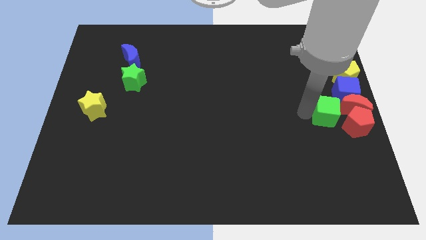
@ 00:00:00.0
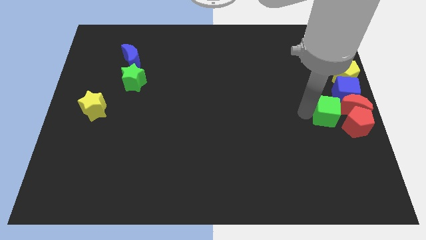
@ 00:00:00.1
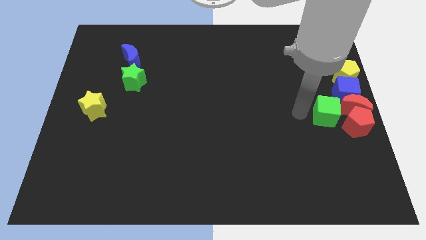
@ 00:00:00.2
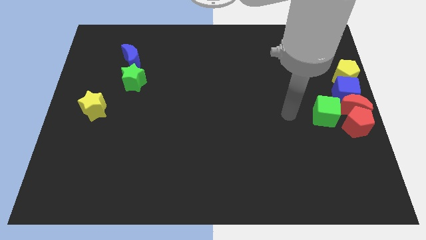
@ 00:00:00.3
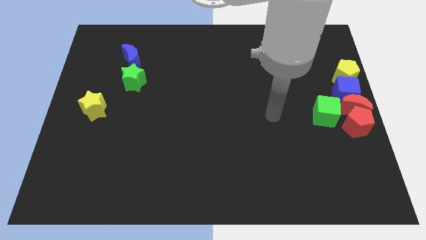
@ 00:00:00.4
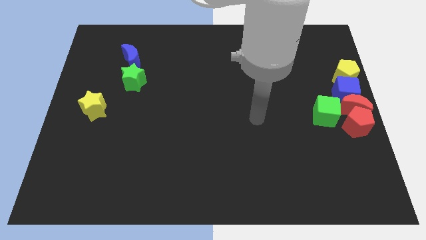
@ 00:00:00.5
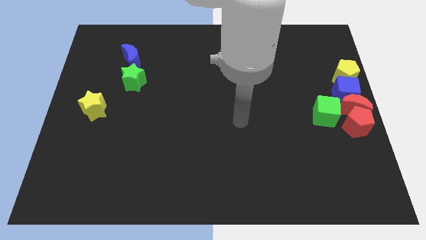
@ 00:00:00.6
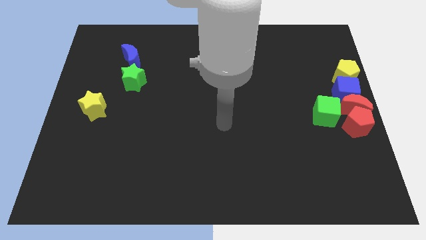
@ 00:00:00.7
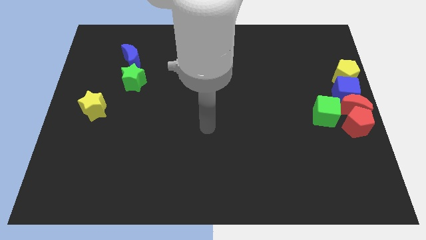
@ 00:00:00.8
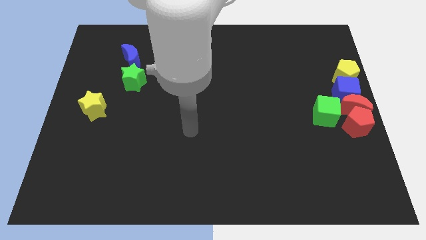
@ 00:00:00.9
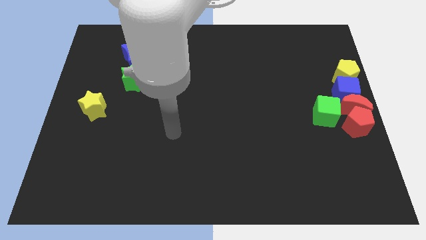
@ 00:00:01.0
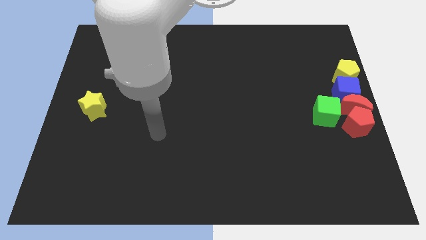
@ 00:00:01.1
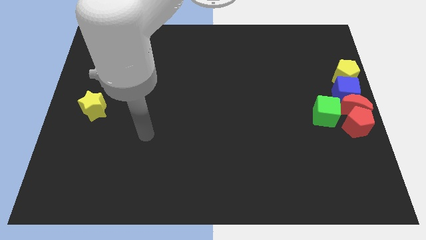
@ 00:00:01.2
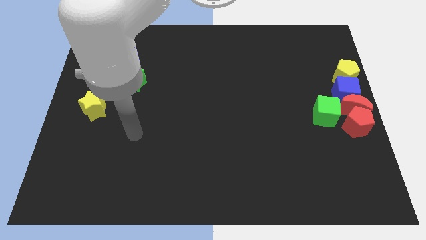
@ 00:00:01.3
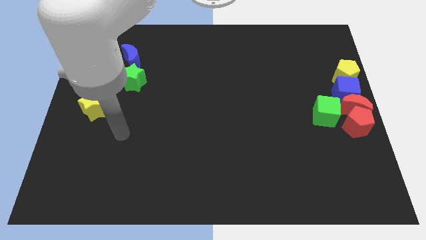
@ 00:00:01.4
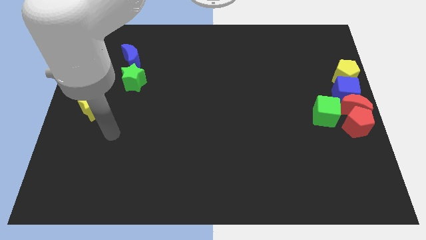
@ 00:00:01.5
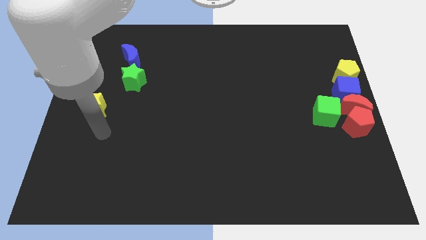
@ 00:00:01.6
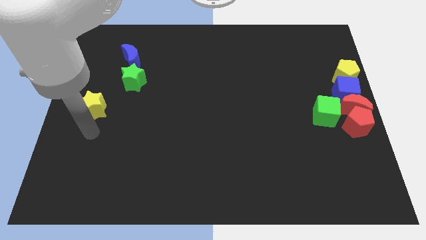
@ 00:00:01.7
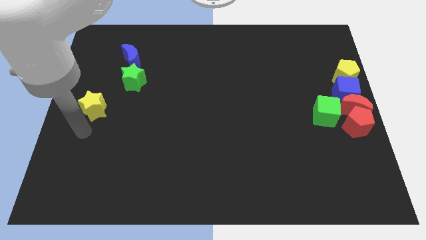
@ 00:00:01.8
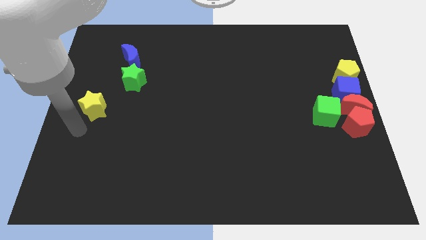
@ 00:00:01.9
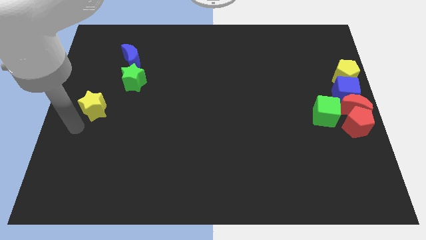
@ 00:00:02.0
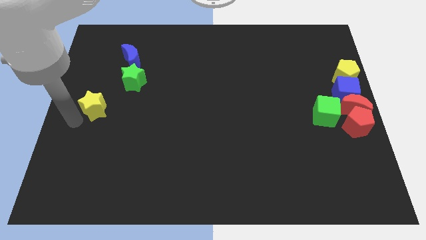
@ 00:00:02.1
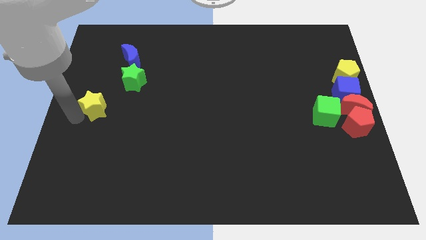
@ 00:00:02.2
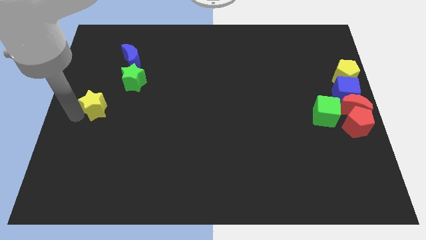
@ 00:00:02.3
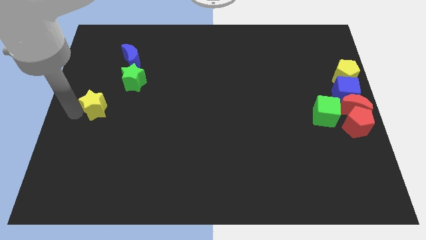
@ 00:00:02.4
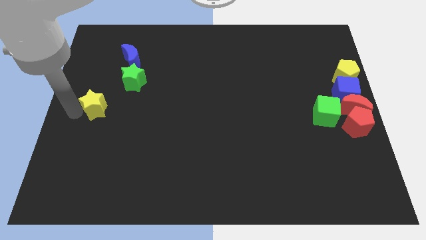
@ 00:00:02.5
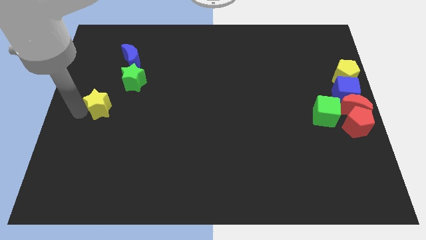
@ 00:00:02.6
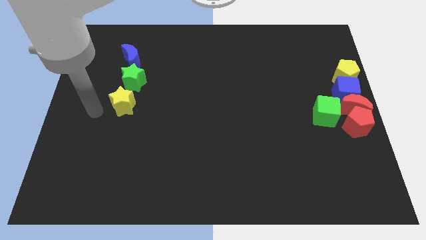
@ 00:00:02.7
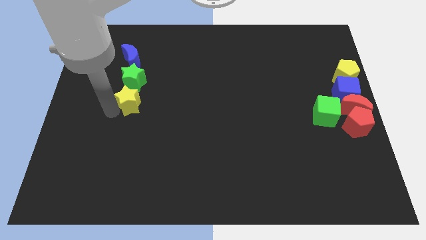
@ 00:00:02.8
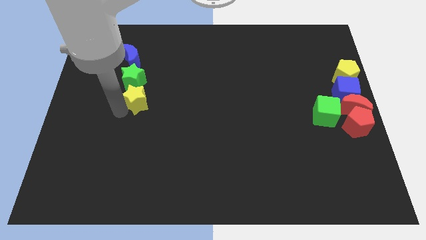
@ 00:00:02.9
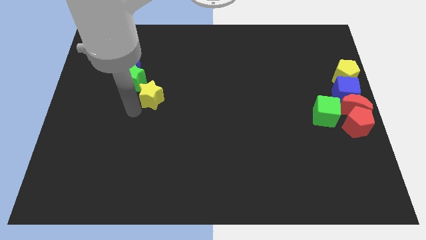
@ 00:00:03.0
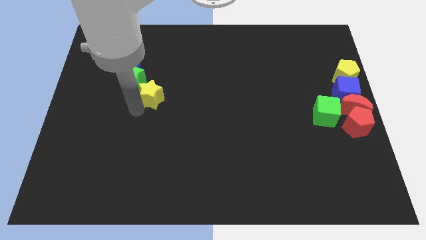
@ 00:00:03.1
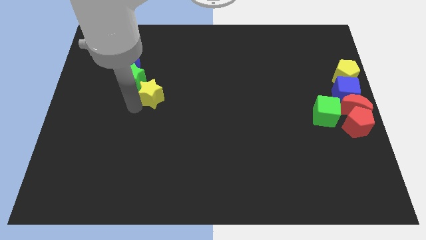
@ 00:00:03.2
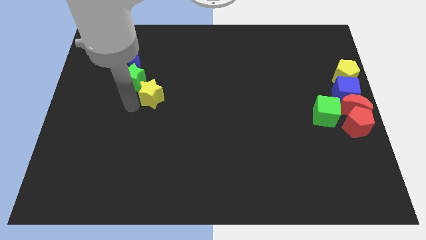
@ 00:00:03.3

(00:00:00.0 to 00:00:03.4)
push the yellow star to the bottom right of the green star

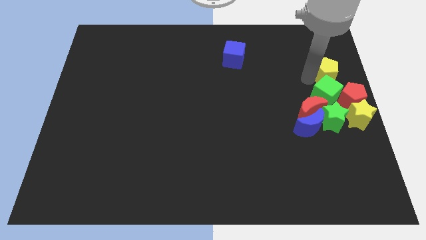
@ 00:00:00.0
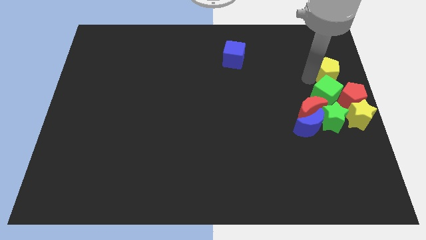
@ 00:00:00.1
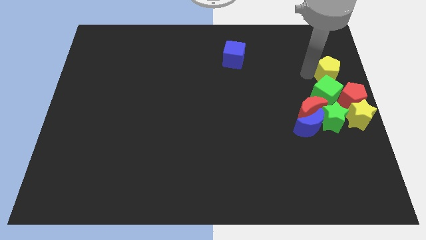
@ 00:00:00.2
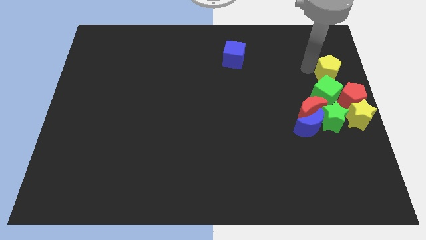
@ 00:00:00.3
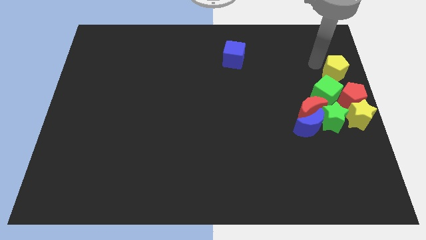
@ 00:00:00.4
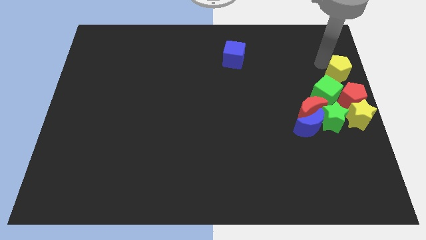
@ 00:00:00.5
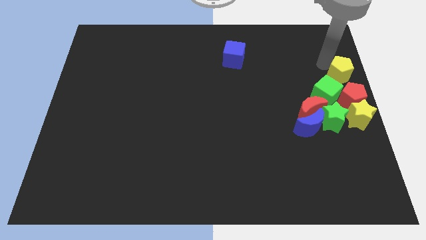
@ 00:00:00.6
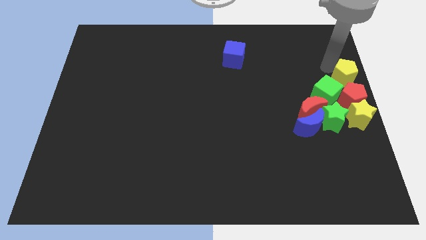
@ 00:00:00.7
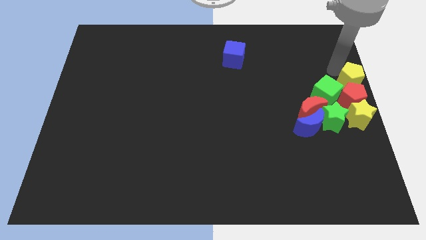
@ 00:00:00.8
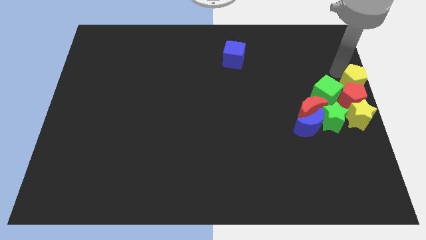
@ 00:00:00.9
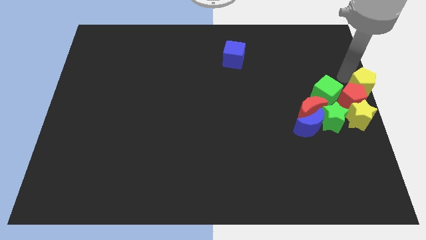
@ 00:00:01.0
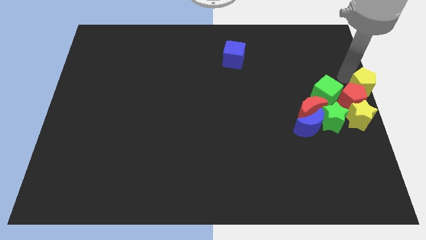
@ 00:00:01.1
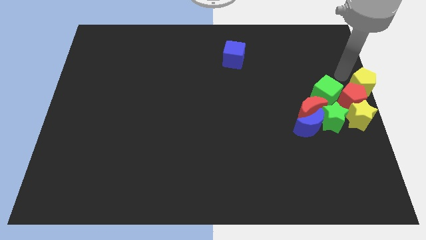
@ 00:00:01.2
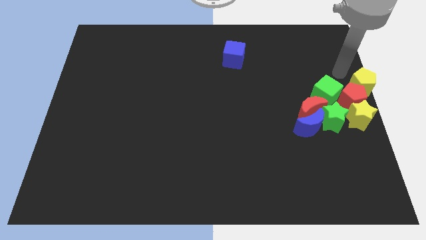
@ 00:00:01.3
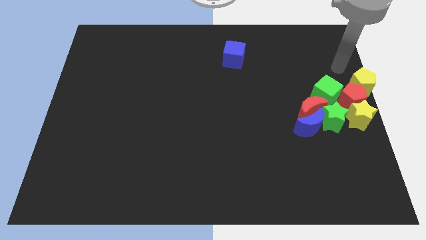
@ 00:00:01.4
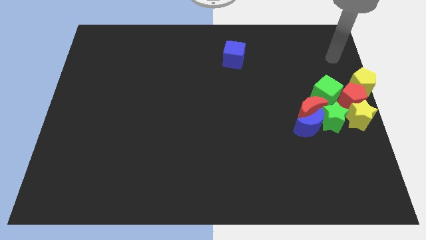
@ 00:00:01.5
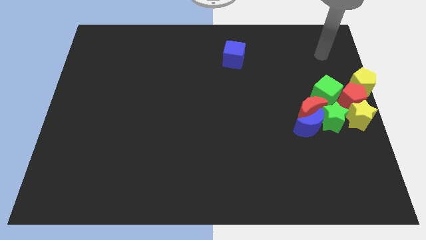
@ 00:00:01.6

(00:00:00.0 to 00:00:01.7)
place the yellow pentagon above the red pentagon

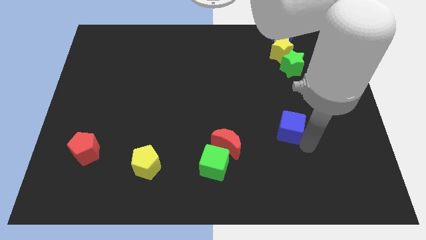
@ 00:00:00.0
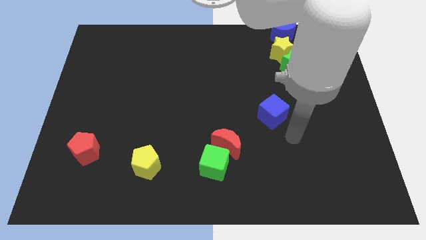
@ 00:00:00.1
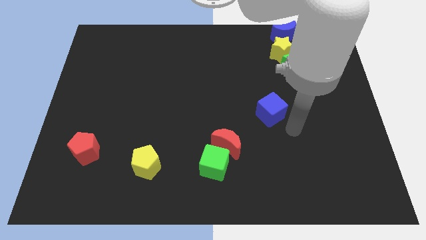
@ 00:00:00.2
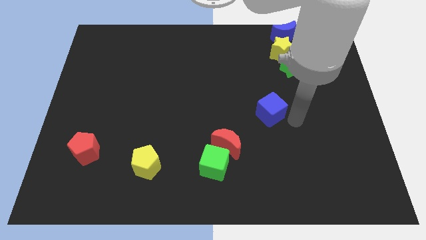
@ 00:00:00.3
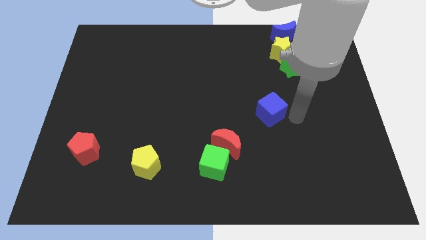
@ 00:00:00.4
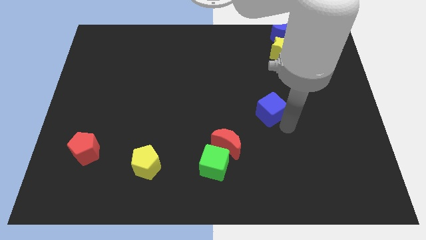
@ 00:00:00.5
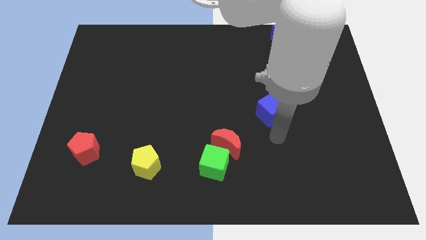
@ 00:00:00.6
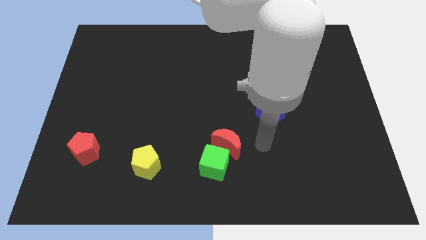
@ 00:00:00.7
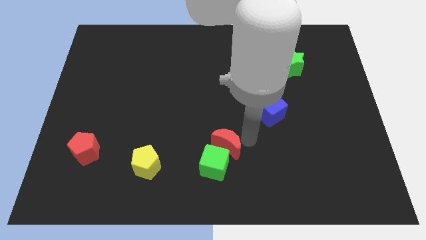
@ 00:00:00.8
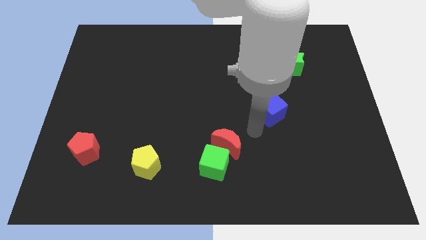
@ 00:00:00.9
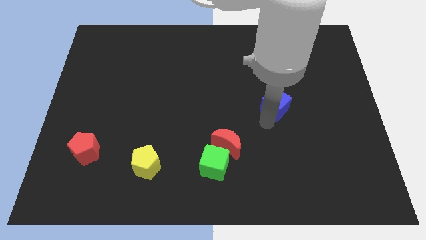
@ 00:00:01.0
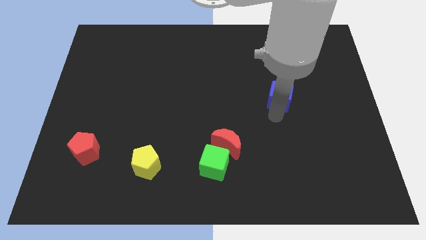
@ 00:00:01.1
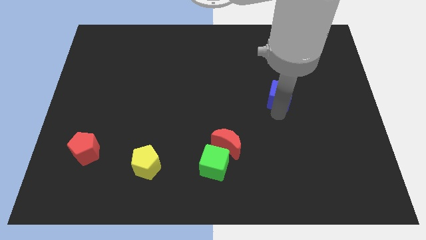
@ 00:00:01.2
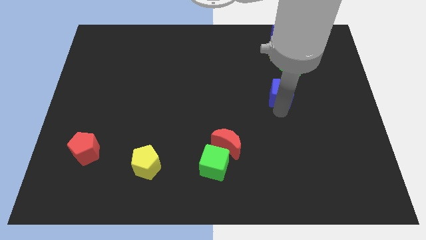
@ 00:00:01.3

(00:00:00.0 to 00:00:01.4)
place the blue cube down to the green star

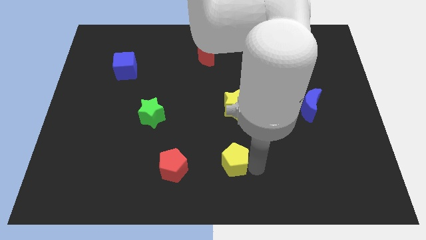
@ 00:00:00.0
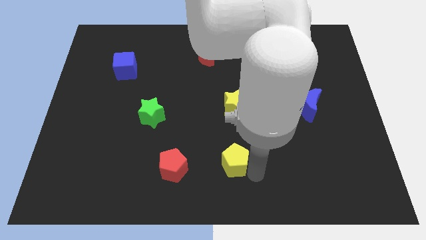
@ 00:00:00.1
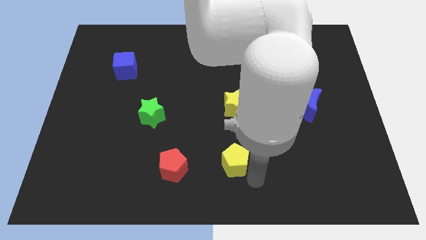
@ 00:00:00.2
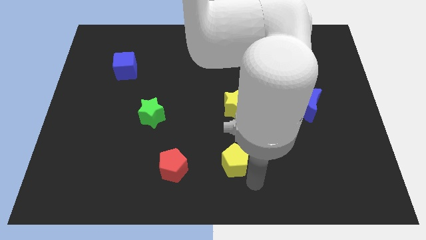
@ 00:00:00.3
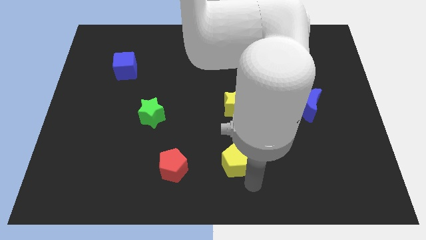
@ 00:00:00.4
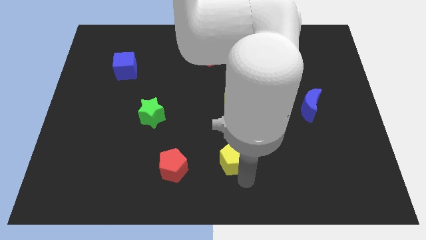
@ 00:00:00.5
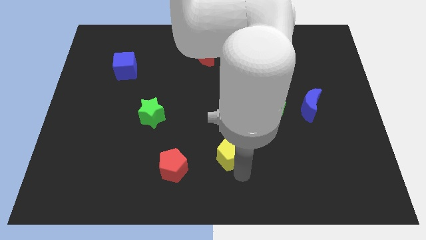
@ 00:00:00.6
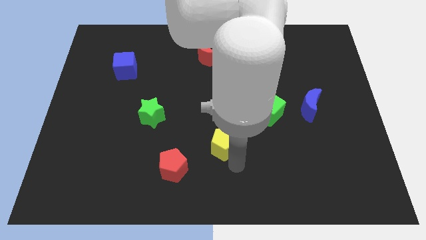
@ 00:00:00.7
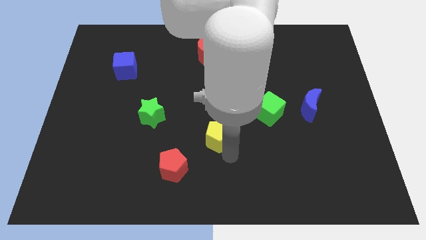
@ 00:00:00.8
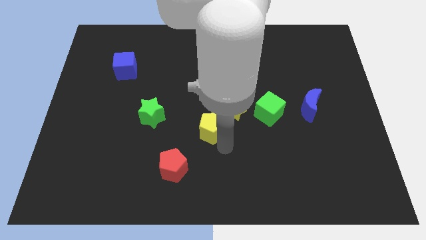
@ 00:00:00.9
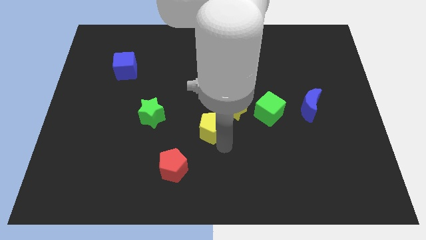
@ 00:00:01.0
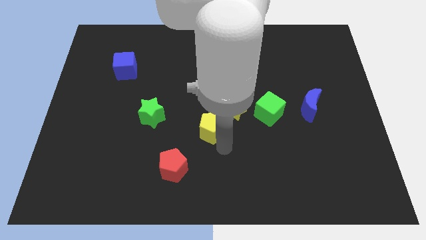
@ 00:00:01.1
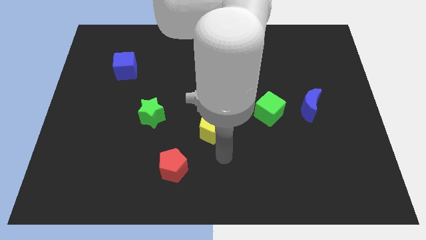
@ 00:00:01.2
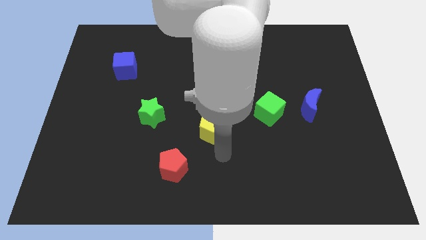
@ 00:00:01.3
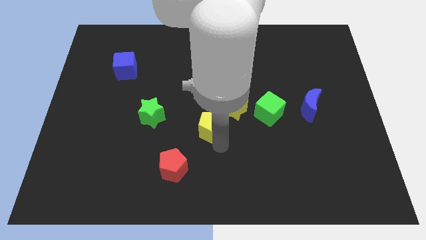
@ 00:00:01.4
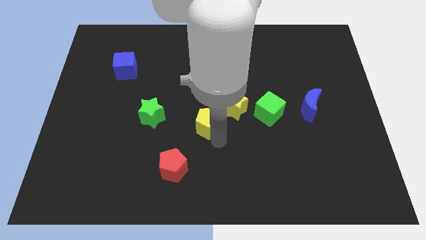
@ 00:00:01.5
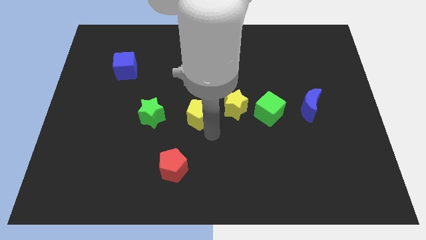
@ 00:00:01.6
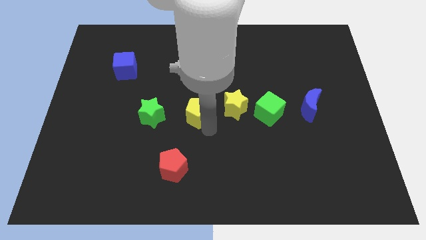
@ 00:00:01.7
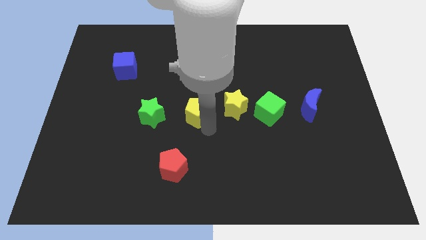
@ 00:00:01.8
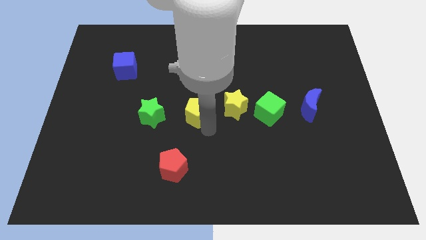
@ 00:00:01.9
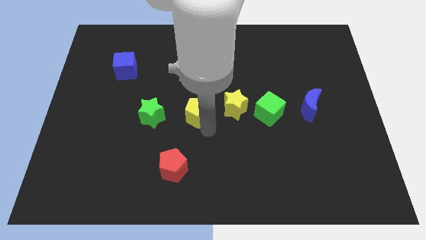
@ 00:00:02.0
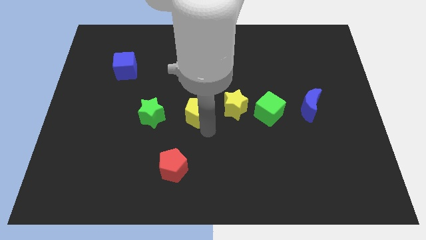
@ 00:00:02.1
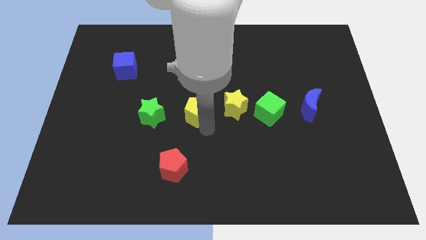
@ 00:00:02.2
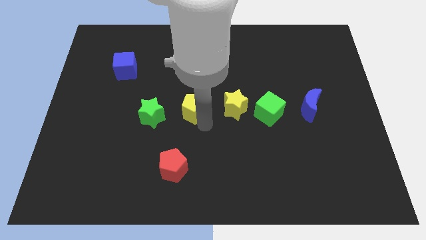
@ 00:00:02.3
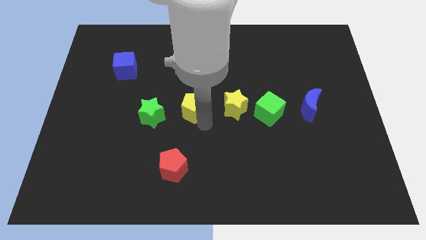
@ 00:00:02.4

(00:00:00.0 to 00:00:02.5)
move the yellow pentagon between yellow and green stars
